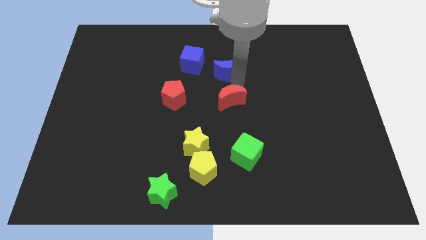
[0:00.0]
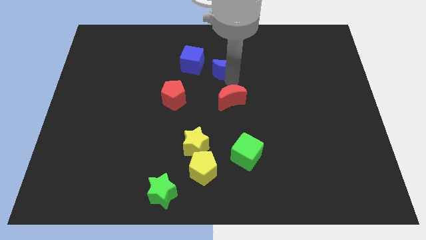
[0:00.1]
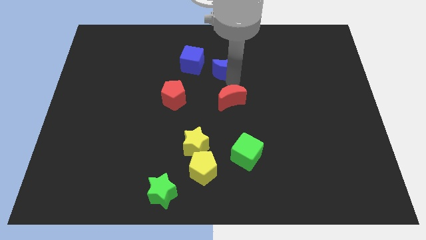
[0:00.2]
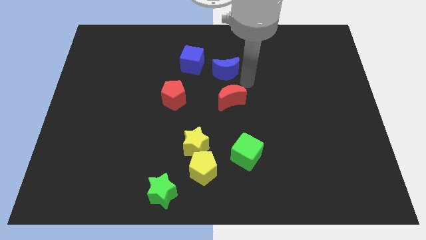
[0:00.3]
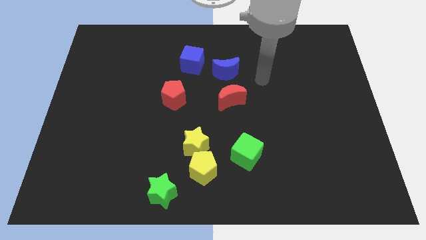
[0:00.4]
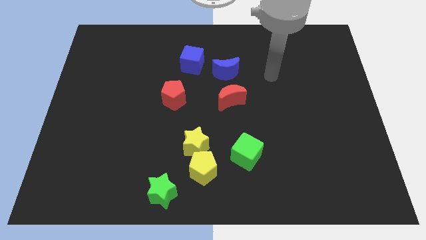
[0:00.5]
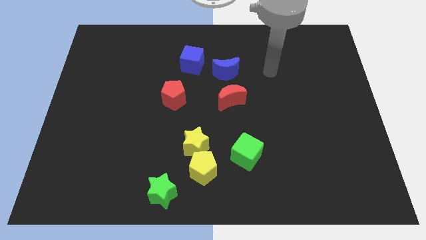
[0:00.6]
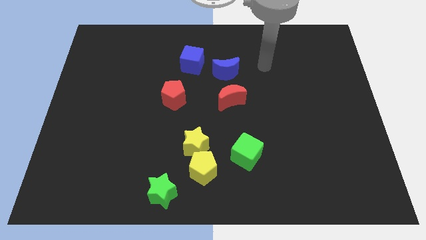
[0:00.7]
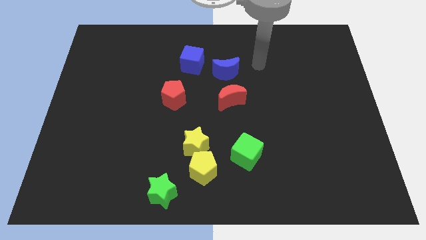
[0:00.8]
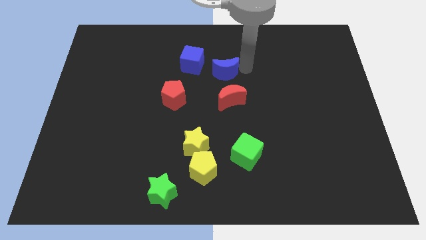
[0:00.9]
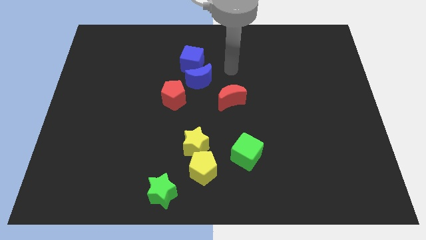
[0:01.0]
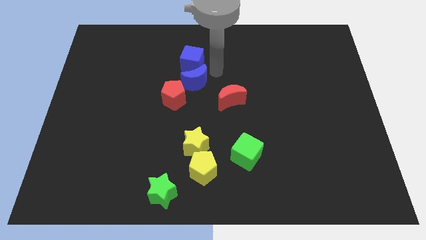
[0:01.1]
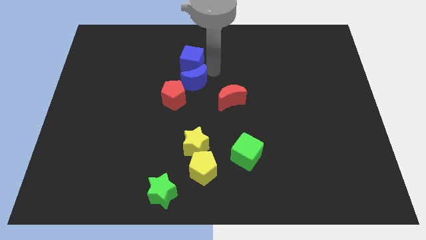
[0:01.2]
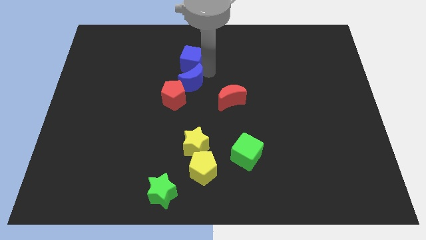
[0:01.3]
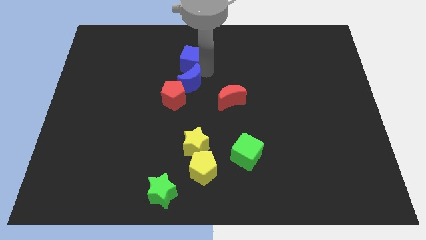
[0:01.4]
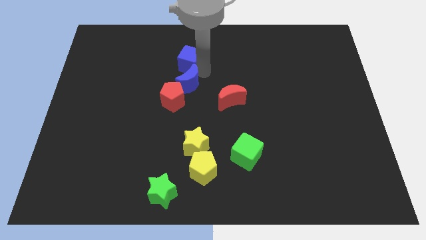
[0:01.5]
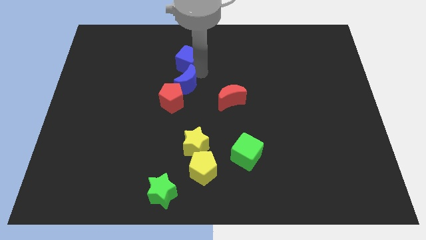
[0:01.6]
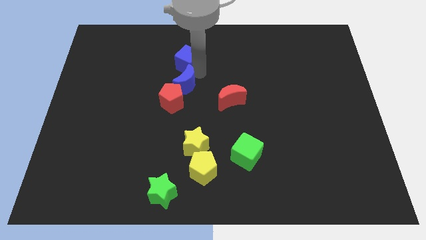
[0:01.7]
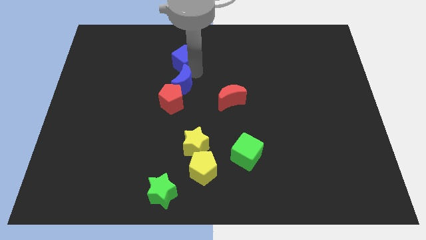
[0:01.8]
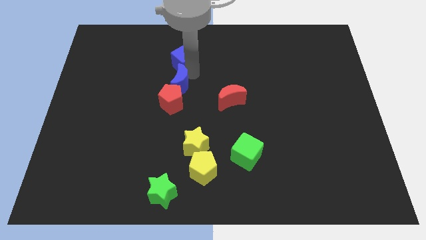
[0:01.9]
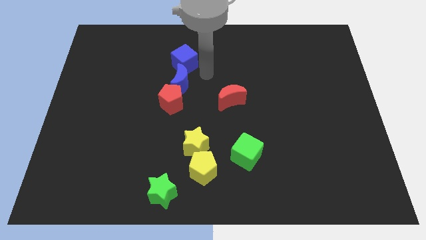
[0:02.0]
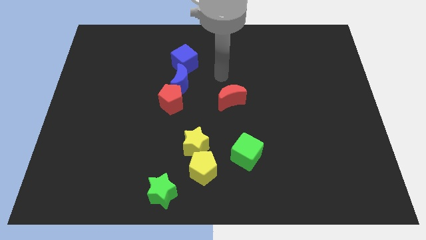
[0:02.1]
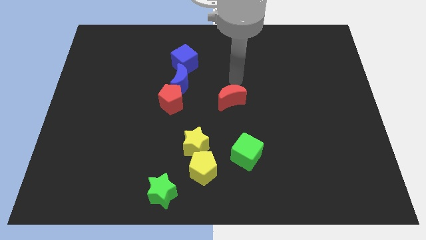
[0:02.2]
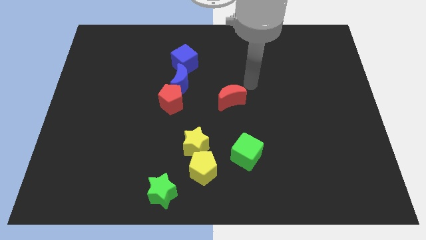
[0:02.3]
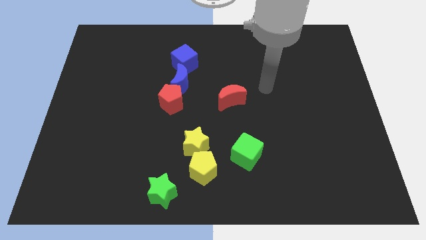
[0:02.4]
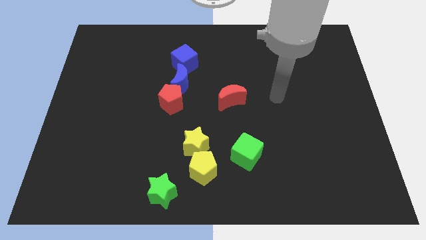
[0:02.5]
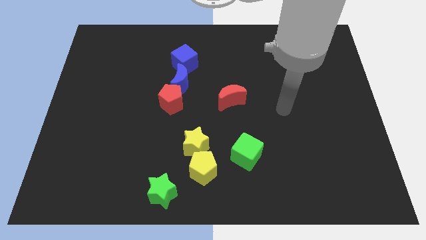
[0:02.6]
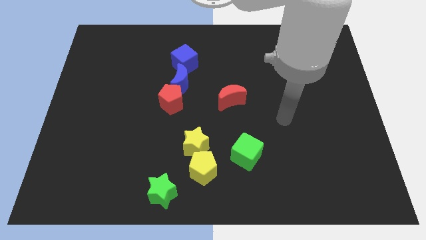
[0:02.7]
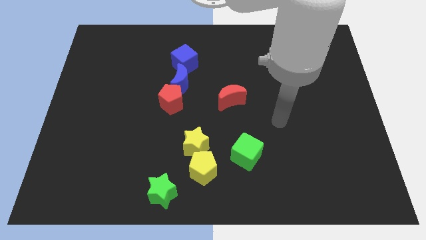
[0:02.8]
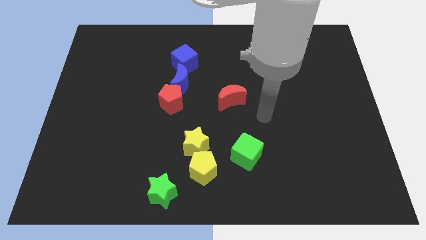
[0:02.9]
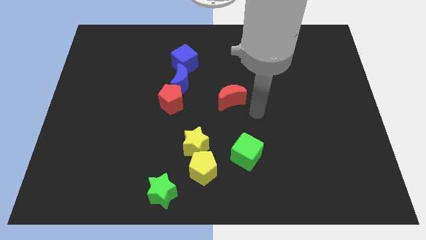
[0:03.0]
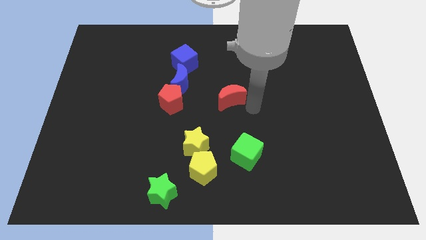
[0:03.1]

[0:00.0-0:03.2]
place the blue moon in between the blue cube and the red pentagon

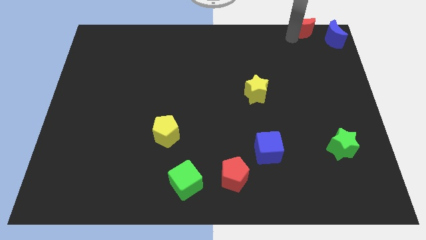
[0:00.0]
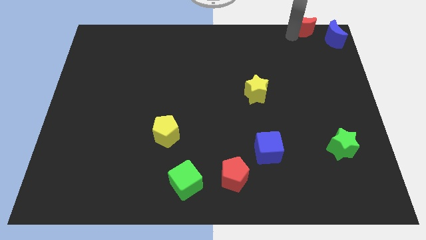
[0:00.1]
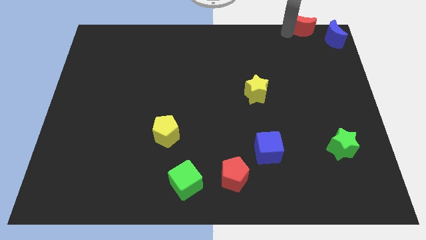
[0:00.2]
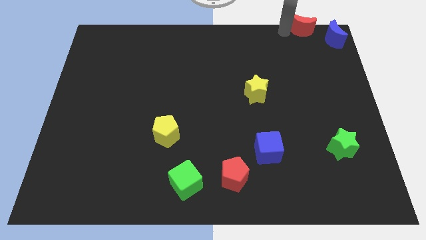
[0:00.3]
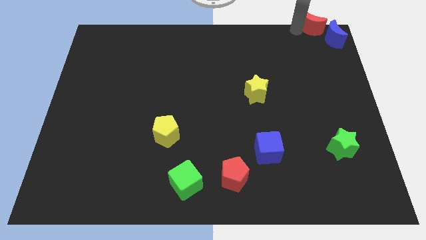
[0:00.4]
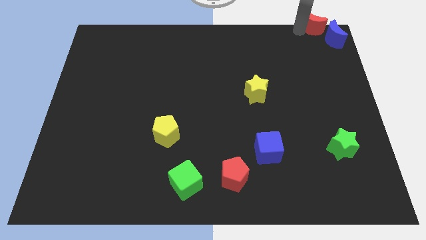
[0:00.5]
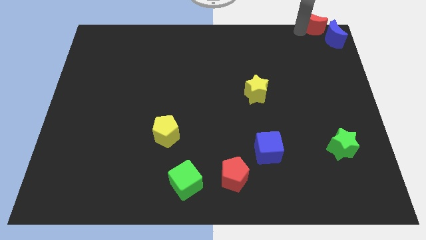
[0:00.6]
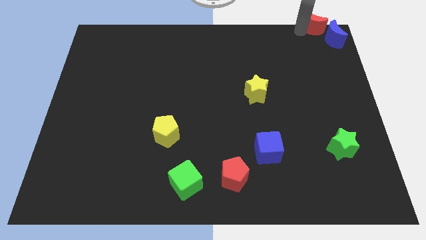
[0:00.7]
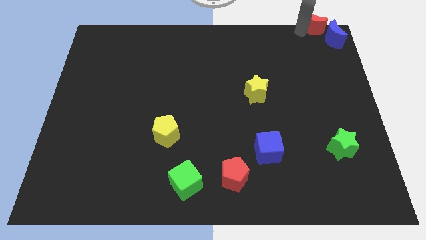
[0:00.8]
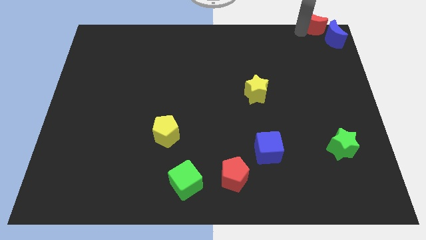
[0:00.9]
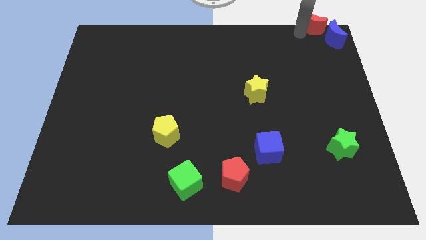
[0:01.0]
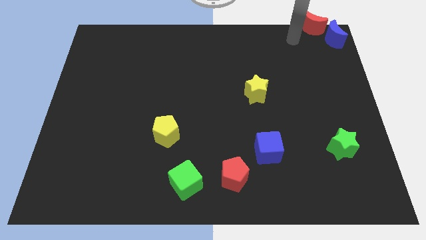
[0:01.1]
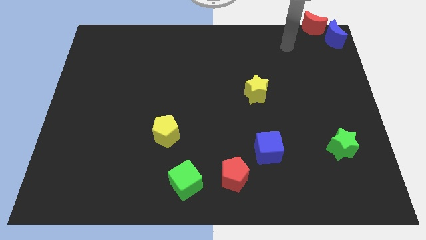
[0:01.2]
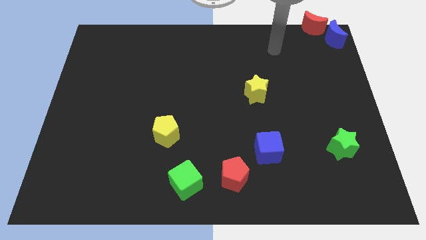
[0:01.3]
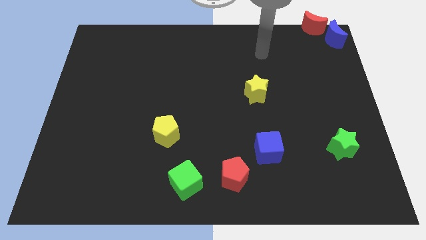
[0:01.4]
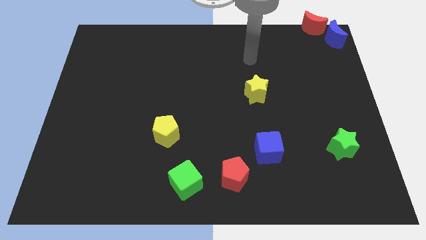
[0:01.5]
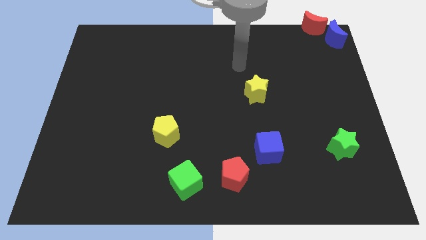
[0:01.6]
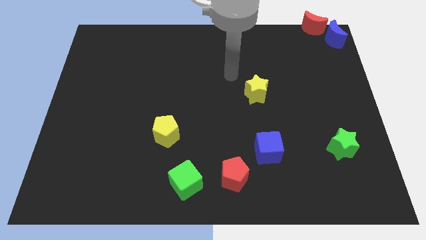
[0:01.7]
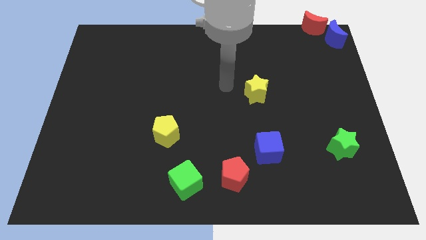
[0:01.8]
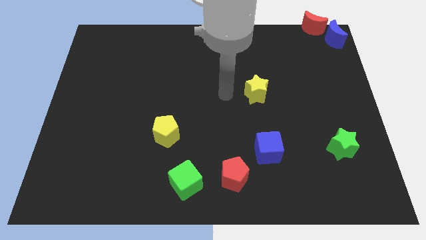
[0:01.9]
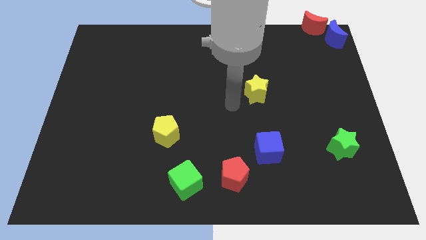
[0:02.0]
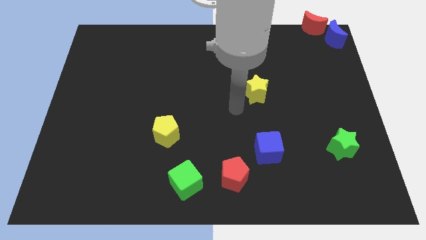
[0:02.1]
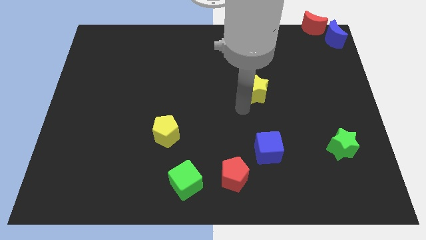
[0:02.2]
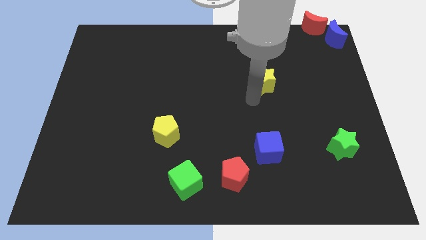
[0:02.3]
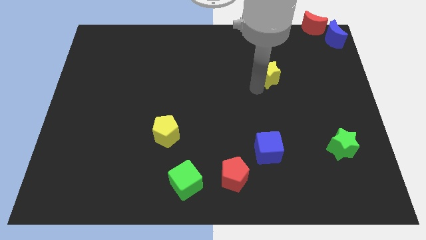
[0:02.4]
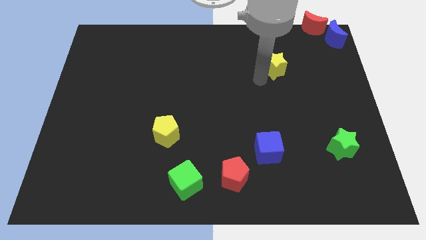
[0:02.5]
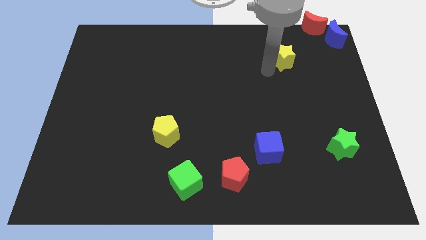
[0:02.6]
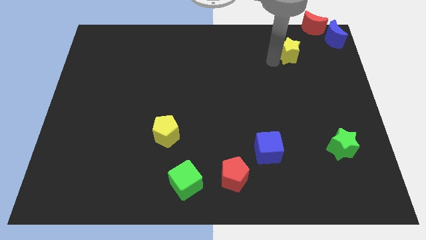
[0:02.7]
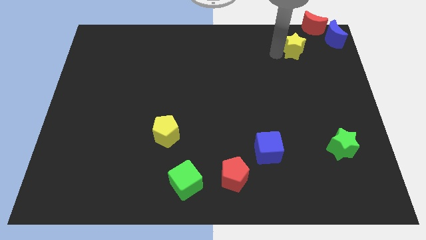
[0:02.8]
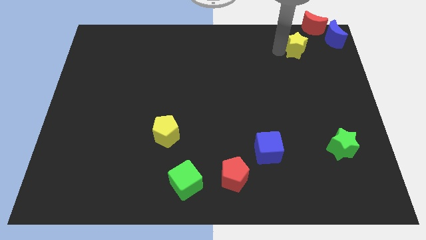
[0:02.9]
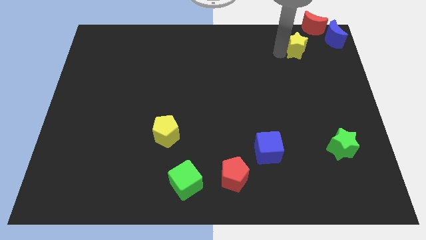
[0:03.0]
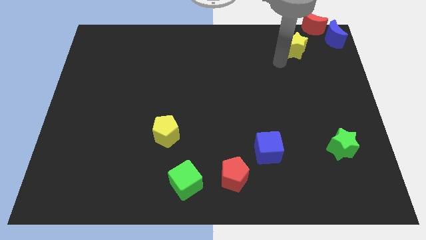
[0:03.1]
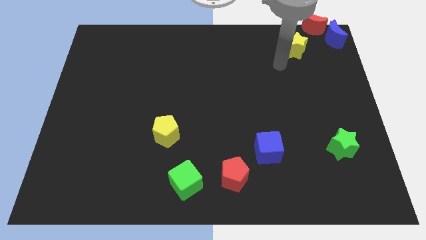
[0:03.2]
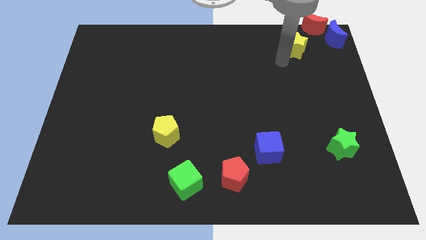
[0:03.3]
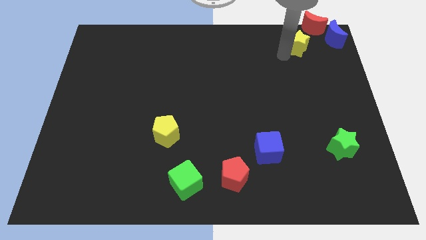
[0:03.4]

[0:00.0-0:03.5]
move the yellow star towards the red crescent

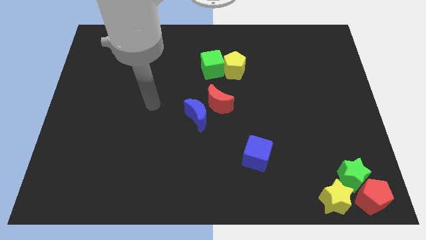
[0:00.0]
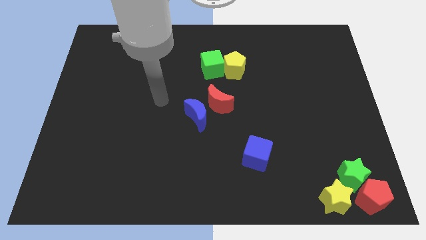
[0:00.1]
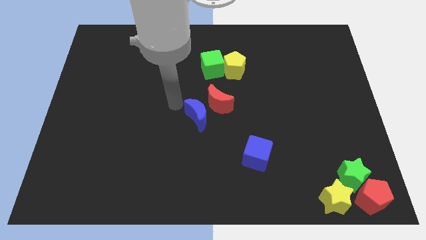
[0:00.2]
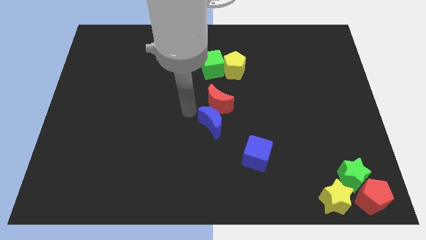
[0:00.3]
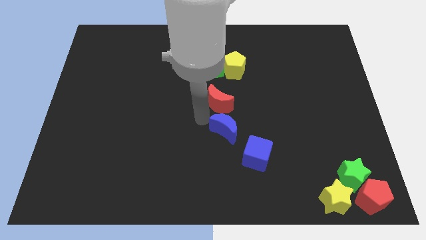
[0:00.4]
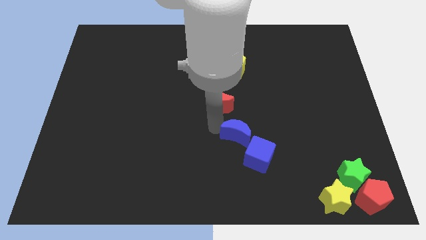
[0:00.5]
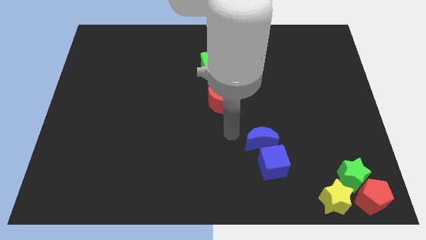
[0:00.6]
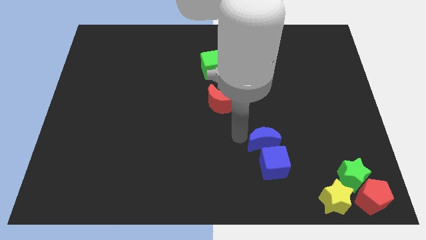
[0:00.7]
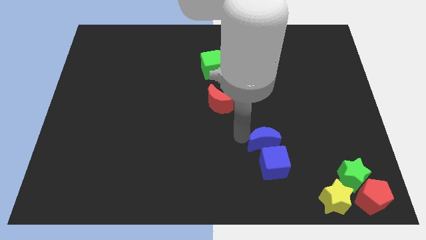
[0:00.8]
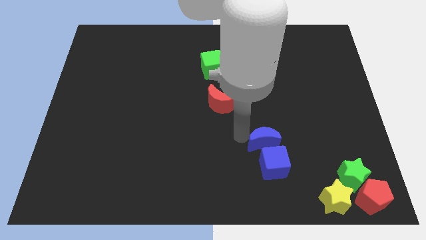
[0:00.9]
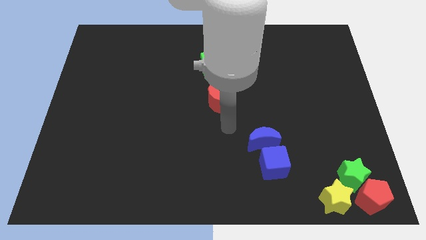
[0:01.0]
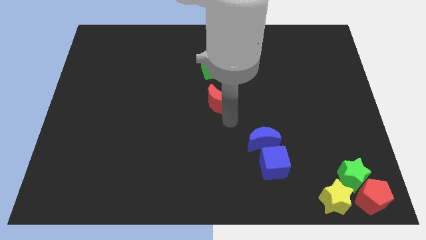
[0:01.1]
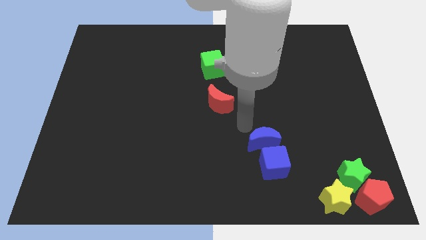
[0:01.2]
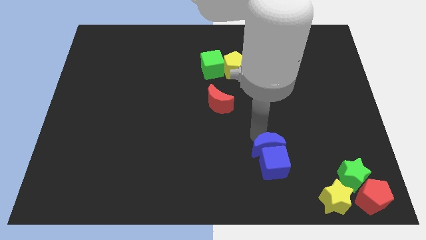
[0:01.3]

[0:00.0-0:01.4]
push the blue crescent into the blue cube

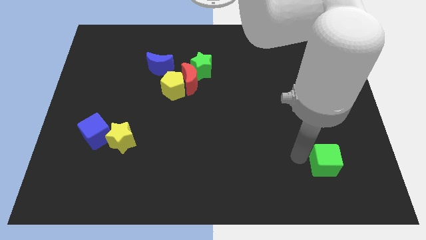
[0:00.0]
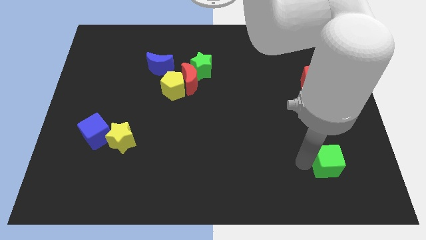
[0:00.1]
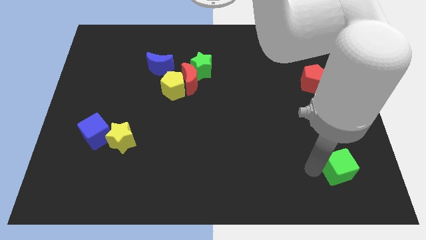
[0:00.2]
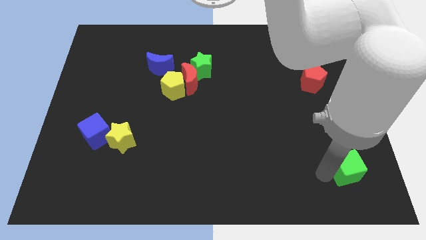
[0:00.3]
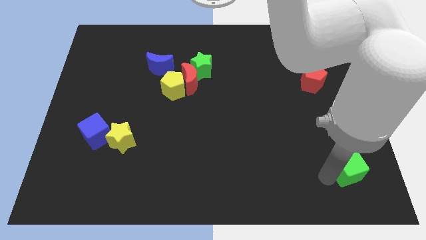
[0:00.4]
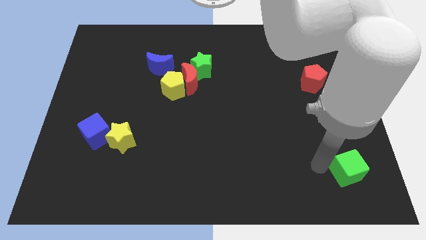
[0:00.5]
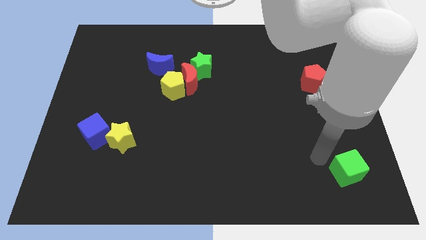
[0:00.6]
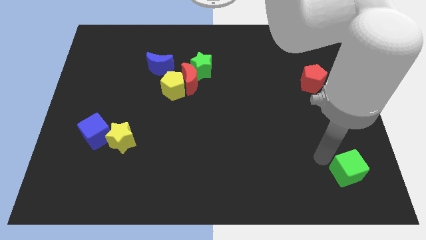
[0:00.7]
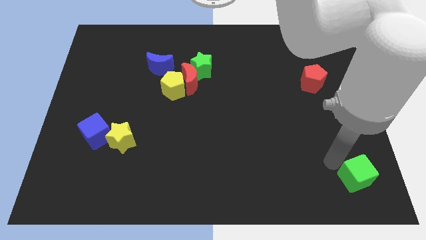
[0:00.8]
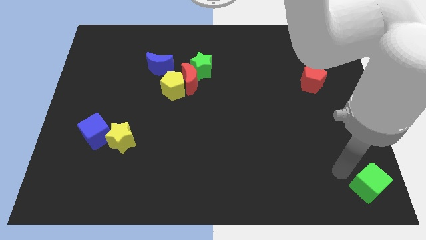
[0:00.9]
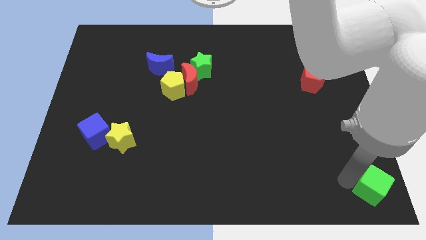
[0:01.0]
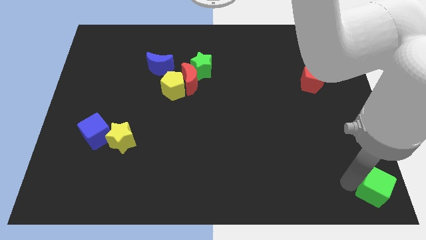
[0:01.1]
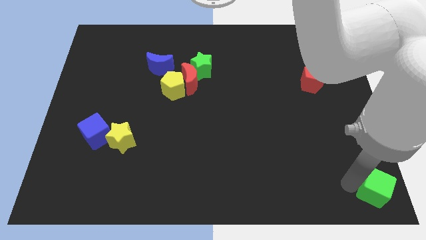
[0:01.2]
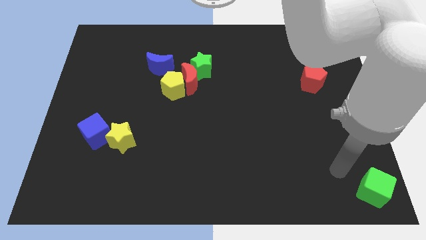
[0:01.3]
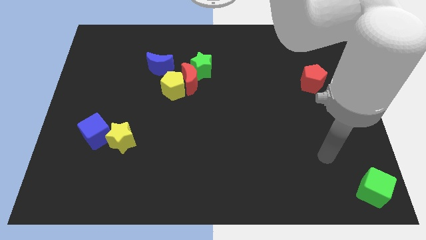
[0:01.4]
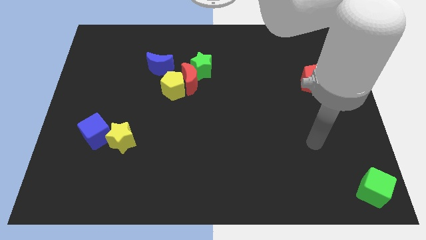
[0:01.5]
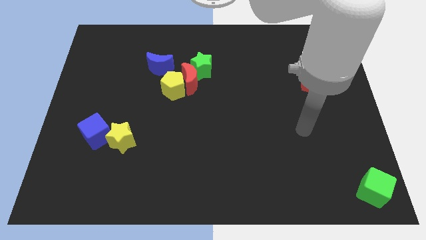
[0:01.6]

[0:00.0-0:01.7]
move the green cube to the bottom right of the board
